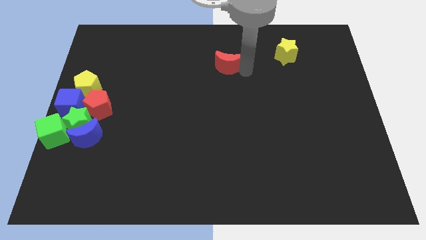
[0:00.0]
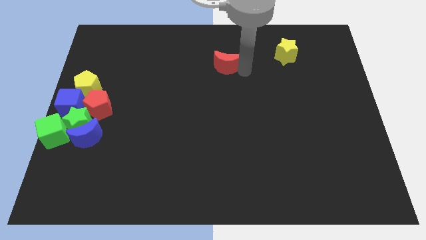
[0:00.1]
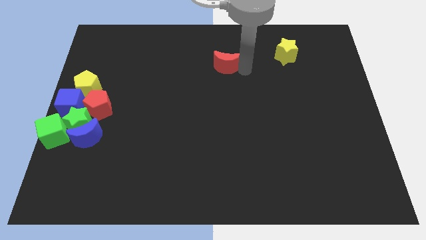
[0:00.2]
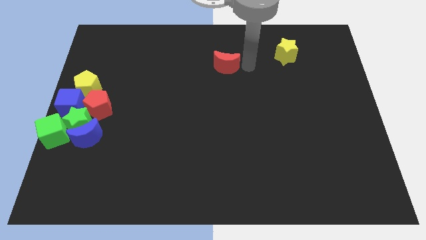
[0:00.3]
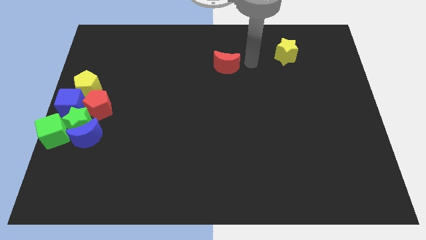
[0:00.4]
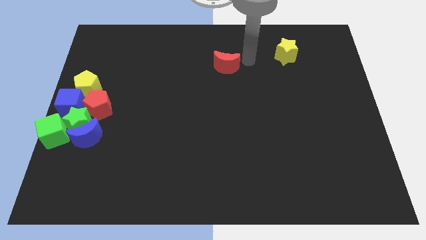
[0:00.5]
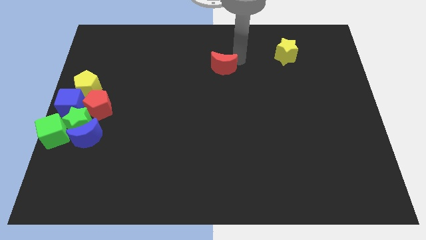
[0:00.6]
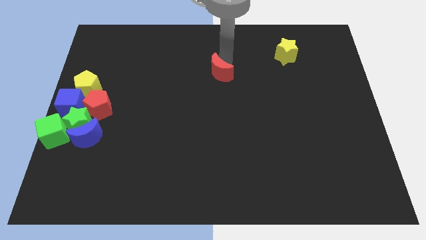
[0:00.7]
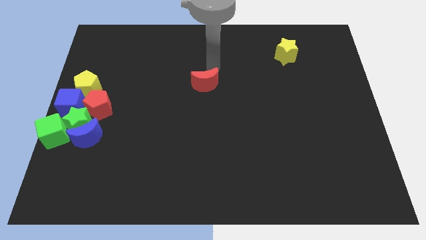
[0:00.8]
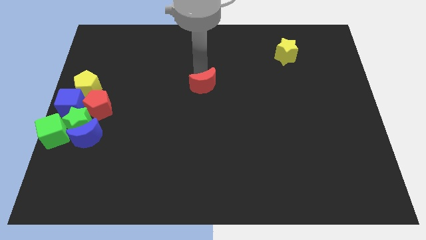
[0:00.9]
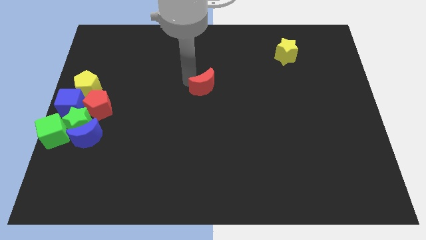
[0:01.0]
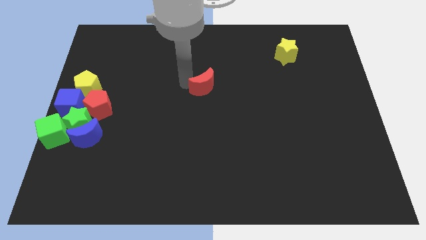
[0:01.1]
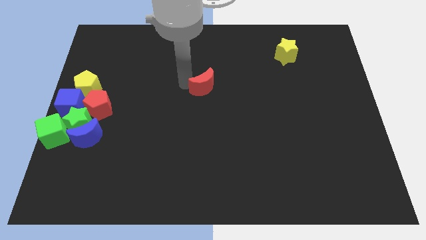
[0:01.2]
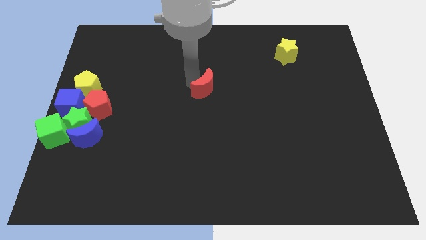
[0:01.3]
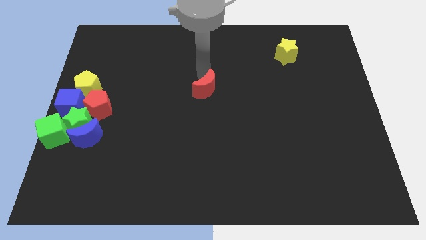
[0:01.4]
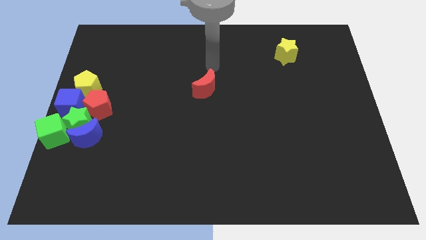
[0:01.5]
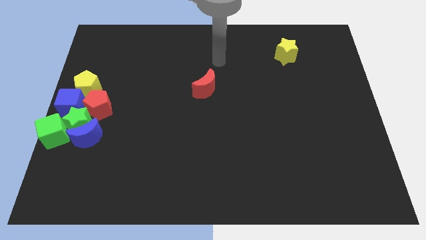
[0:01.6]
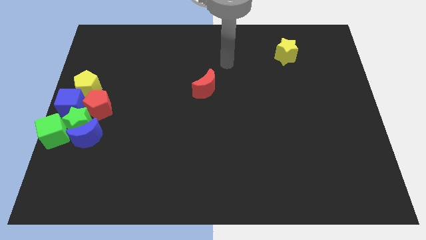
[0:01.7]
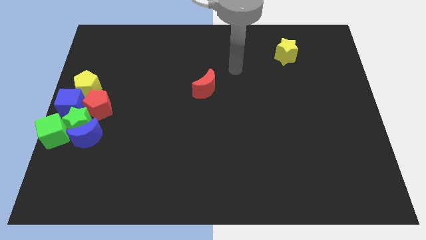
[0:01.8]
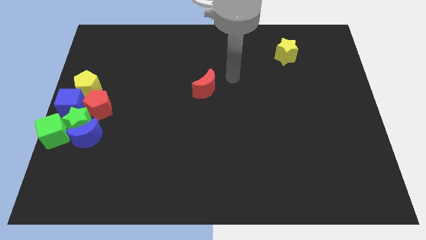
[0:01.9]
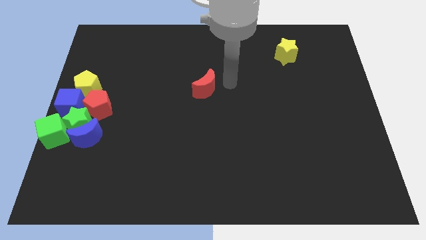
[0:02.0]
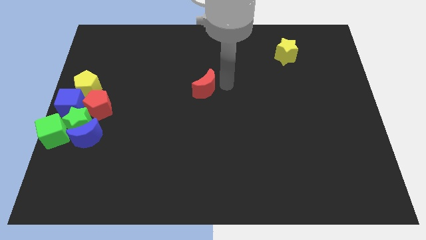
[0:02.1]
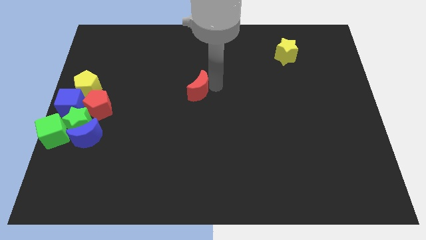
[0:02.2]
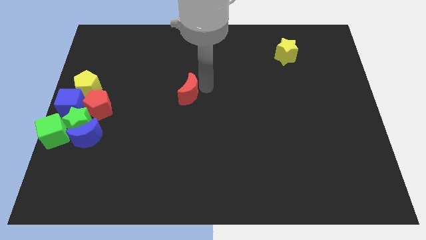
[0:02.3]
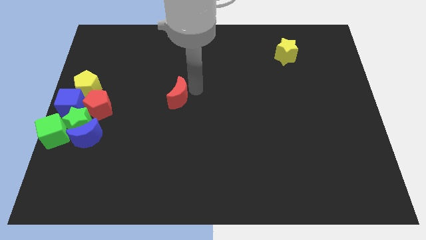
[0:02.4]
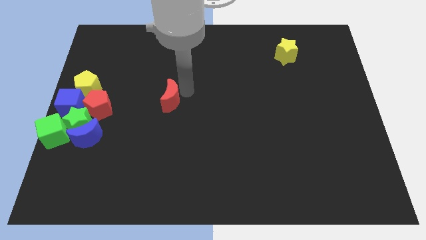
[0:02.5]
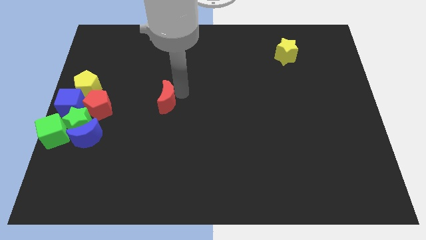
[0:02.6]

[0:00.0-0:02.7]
drag the red moon slightly downwards

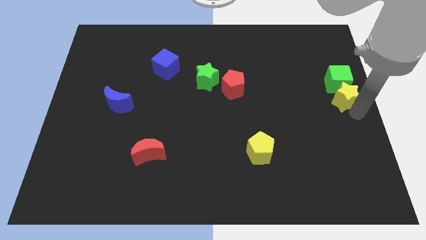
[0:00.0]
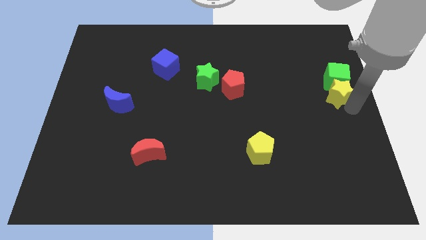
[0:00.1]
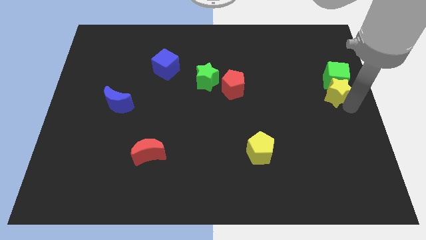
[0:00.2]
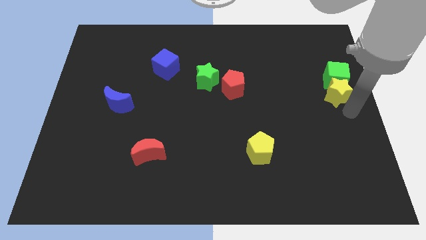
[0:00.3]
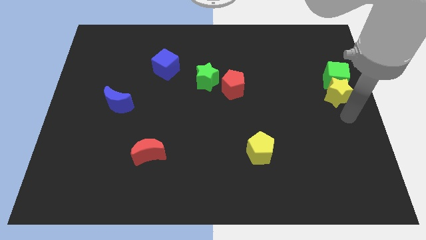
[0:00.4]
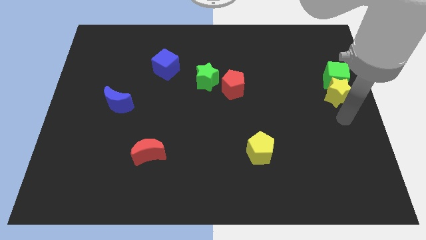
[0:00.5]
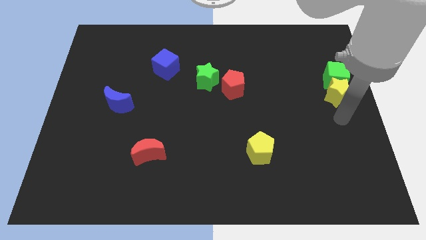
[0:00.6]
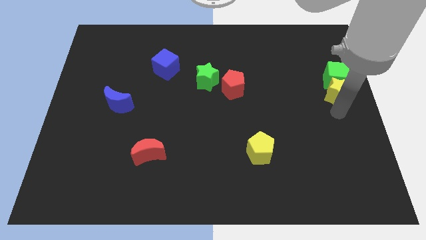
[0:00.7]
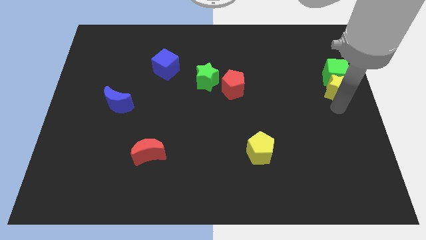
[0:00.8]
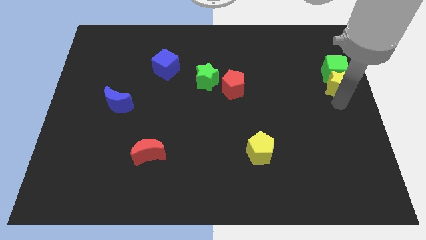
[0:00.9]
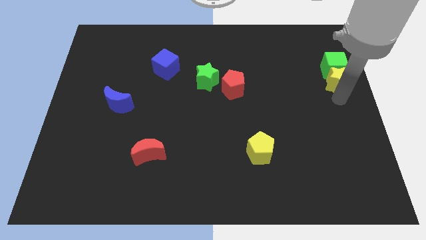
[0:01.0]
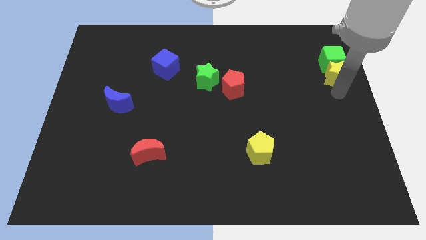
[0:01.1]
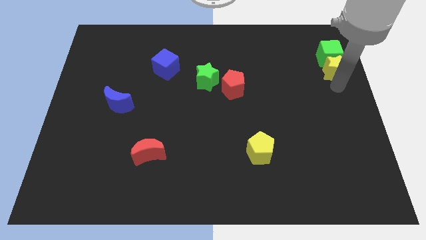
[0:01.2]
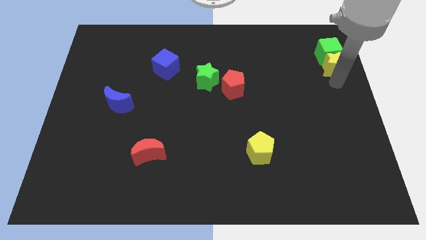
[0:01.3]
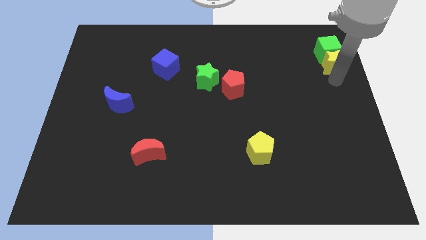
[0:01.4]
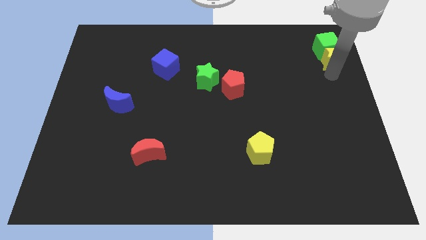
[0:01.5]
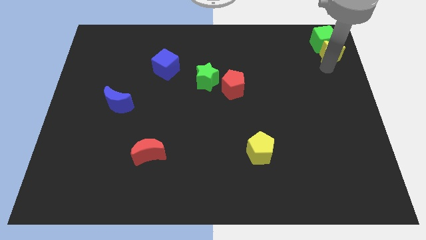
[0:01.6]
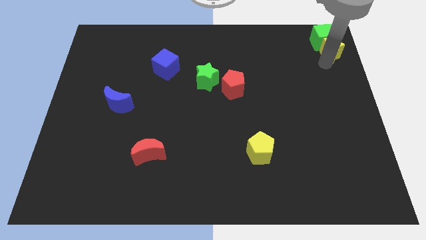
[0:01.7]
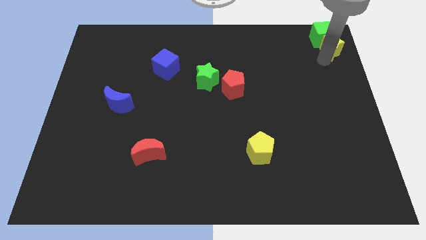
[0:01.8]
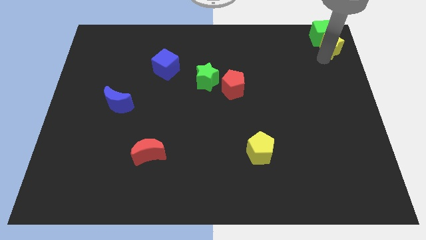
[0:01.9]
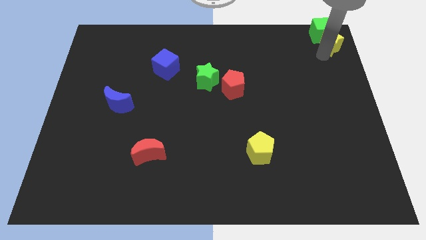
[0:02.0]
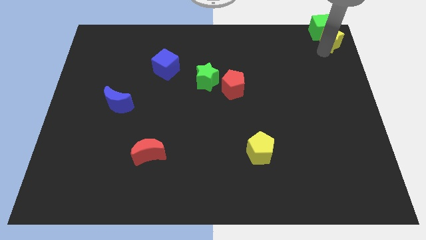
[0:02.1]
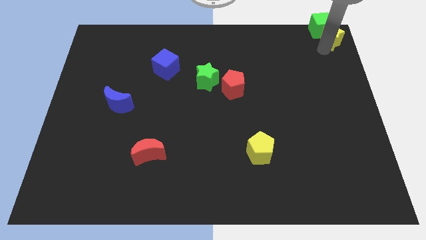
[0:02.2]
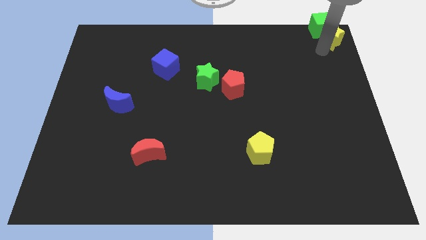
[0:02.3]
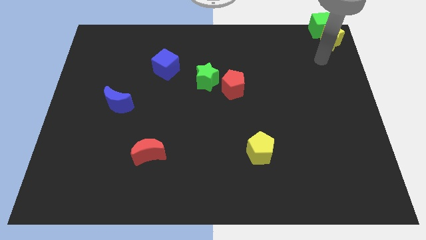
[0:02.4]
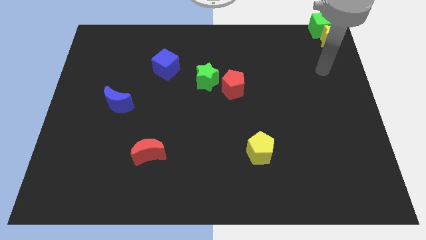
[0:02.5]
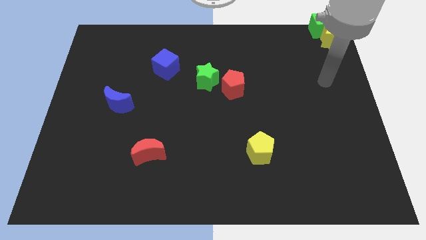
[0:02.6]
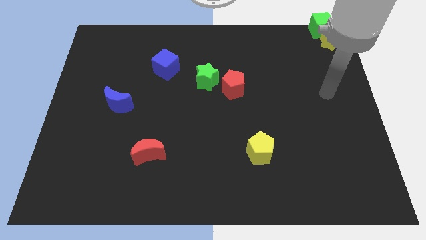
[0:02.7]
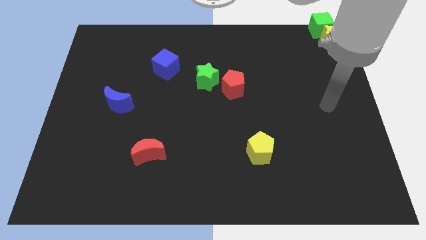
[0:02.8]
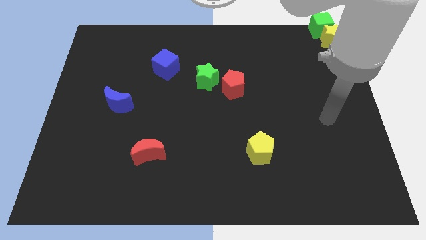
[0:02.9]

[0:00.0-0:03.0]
place the yellow star and green cube to the top right center of the board

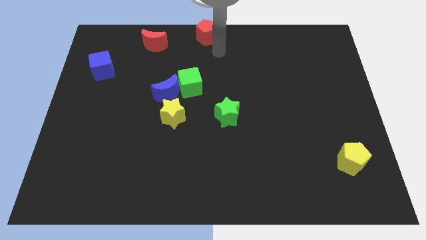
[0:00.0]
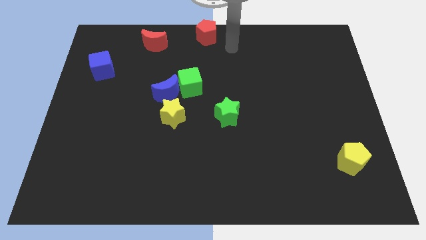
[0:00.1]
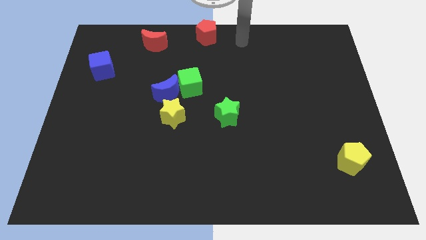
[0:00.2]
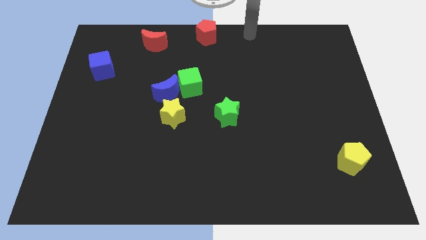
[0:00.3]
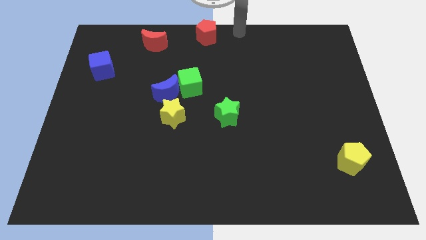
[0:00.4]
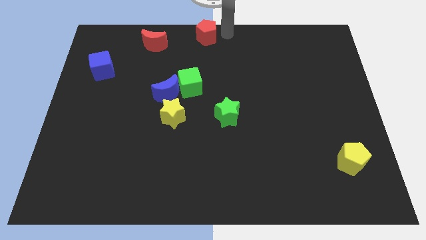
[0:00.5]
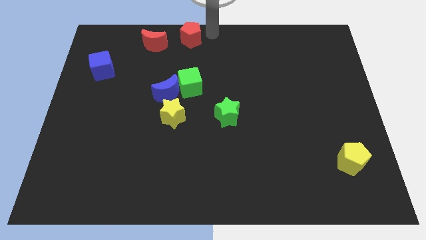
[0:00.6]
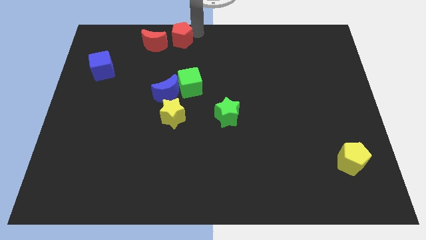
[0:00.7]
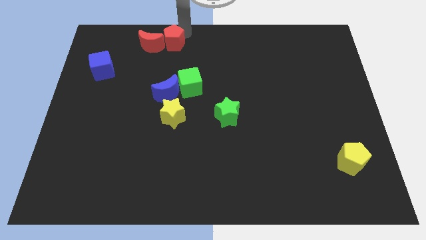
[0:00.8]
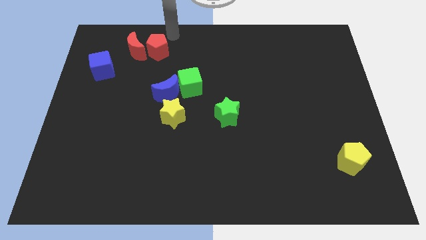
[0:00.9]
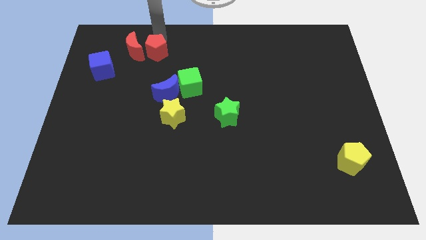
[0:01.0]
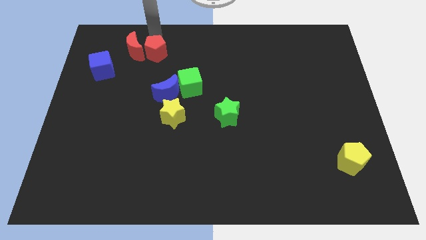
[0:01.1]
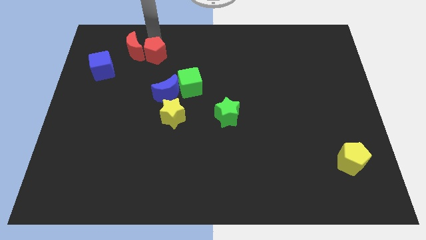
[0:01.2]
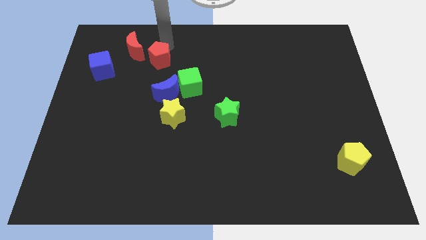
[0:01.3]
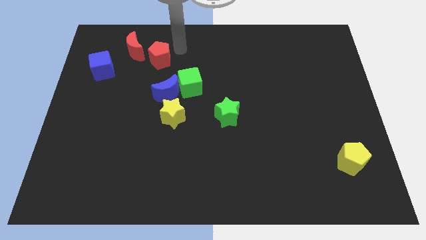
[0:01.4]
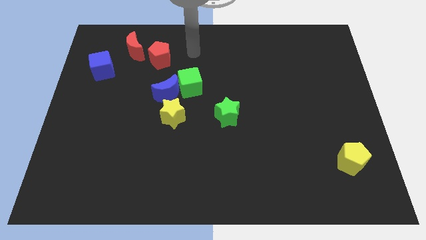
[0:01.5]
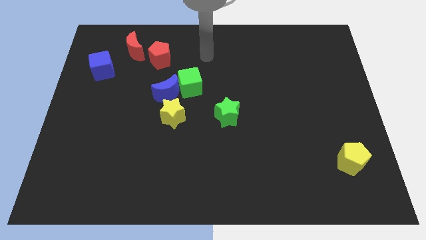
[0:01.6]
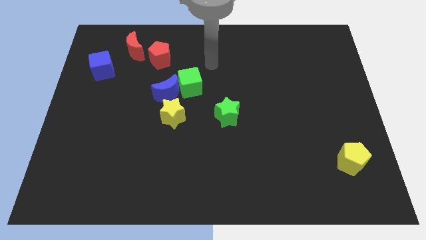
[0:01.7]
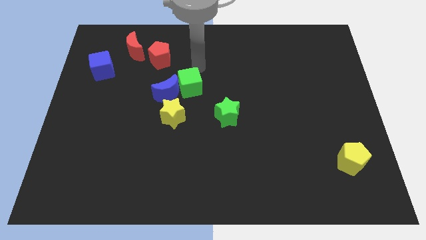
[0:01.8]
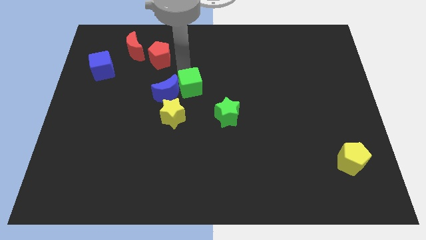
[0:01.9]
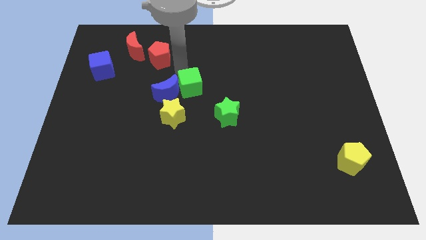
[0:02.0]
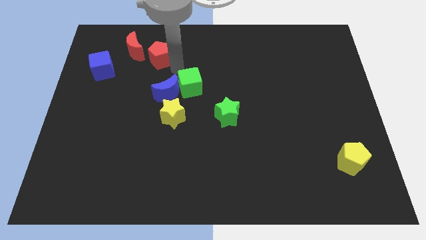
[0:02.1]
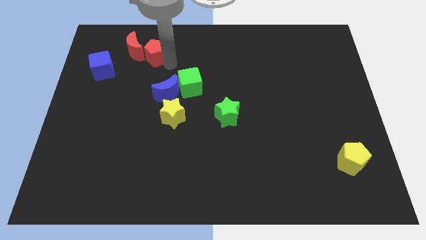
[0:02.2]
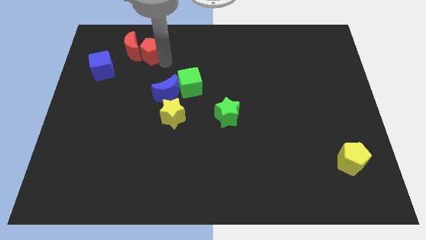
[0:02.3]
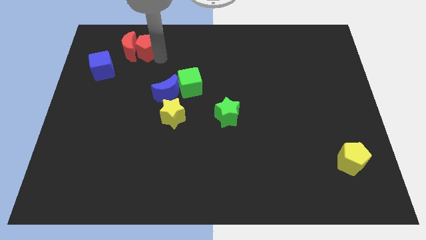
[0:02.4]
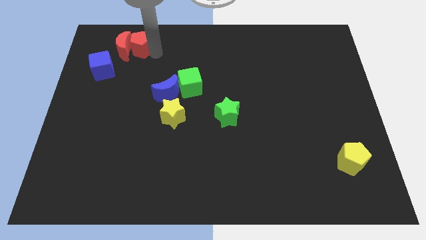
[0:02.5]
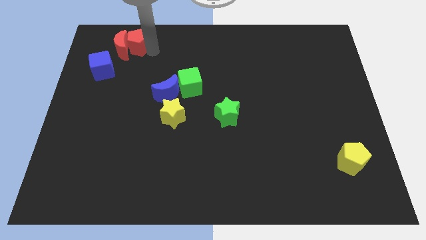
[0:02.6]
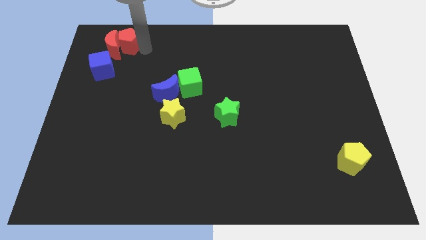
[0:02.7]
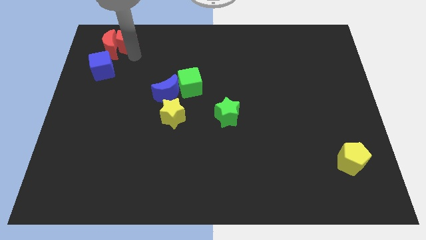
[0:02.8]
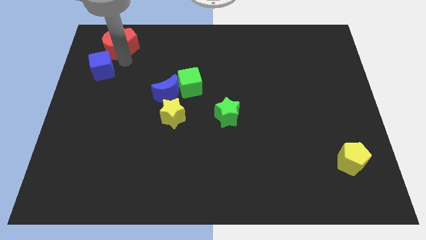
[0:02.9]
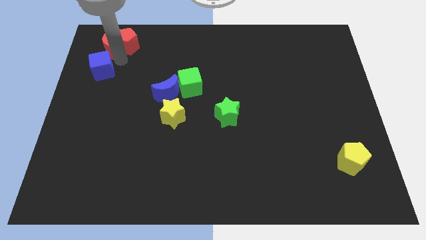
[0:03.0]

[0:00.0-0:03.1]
push the red pentagon into the red moon

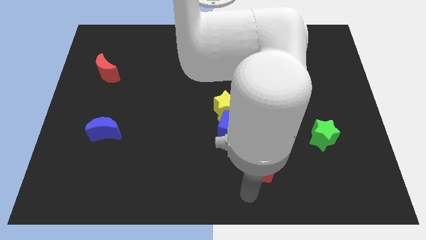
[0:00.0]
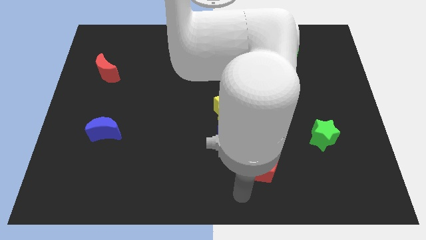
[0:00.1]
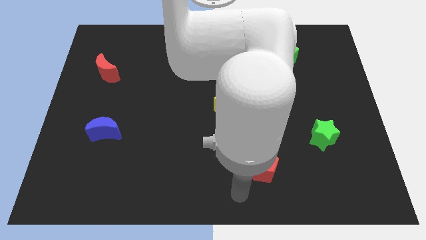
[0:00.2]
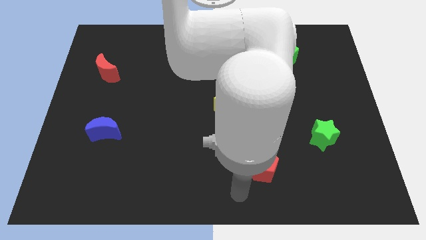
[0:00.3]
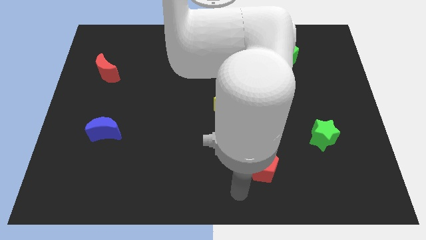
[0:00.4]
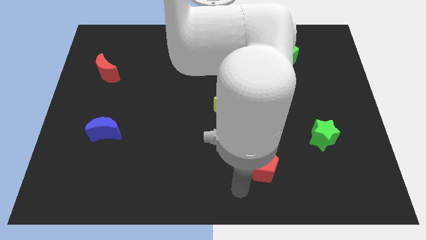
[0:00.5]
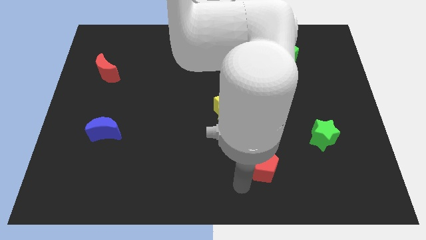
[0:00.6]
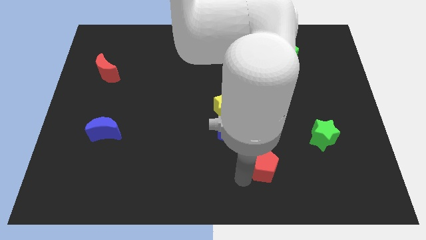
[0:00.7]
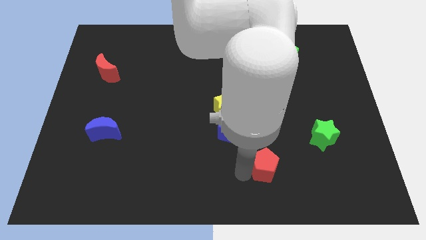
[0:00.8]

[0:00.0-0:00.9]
tap the red pentagon
